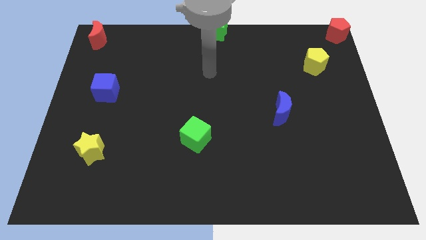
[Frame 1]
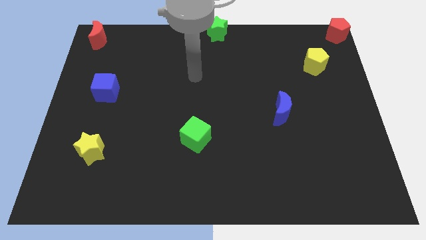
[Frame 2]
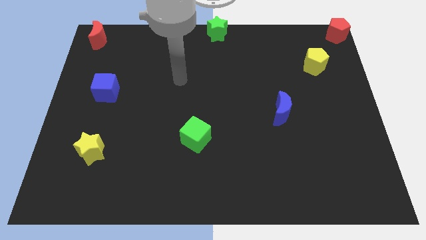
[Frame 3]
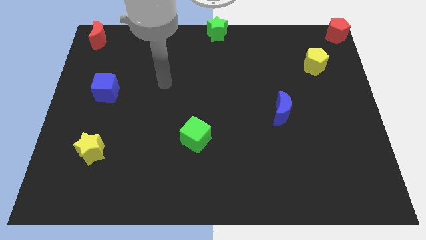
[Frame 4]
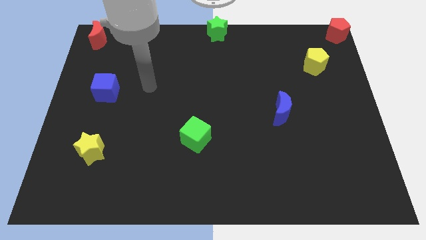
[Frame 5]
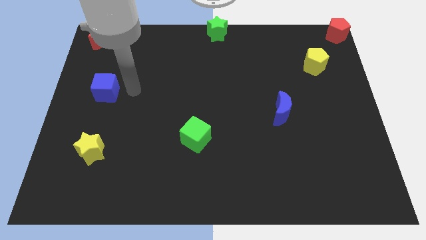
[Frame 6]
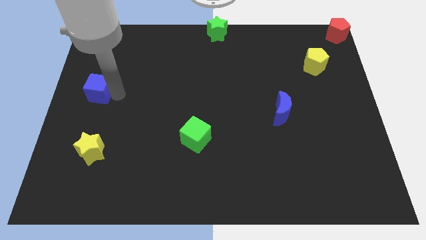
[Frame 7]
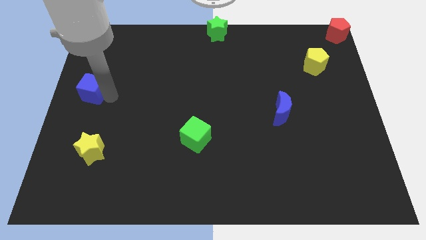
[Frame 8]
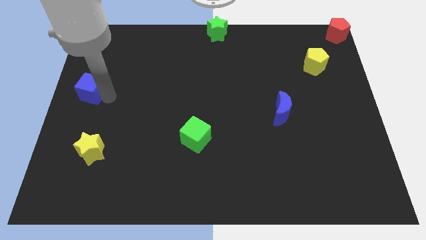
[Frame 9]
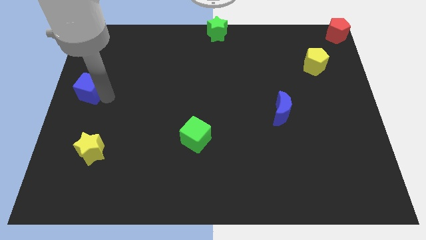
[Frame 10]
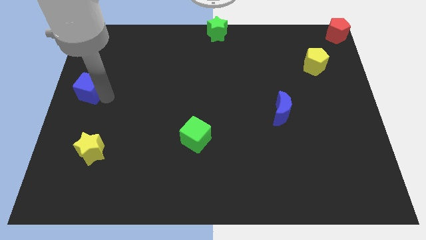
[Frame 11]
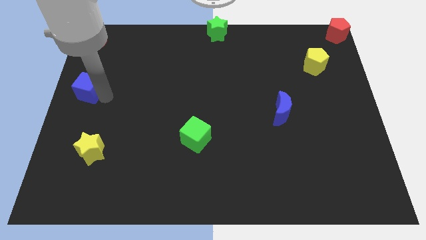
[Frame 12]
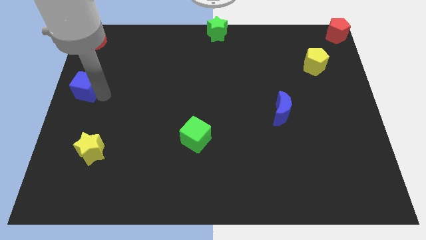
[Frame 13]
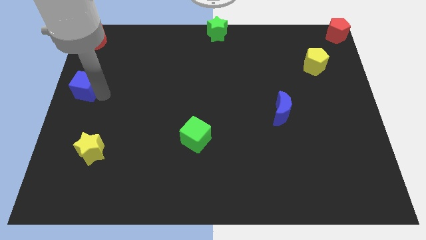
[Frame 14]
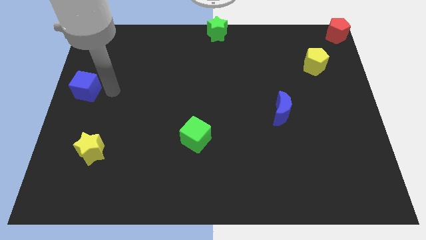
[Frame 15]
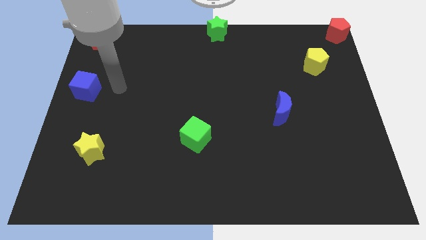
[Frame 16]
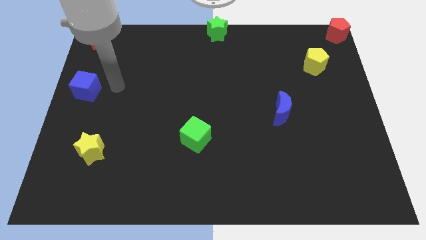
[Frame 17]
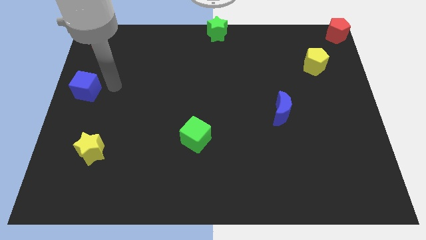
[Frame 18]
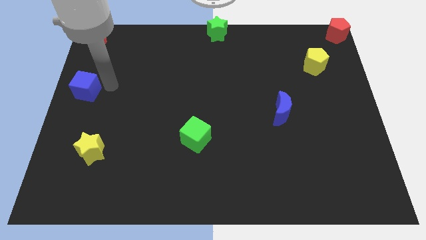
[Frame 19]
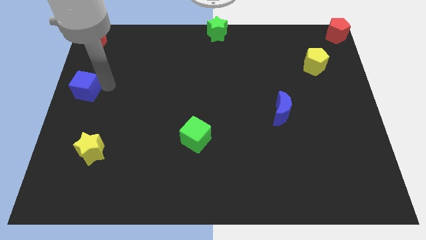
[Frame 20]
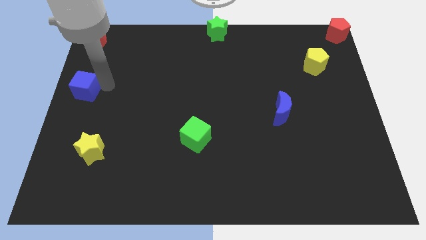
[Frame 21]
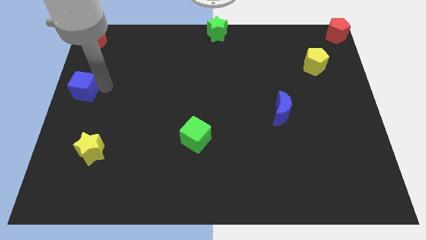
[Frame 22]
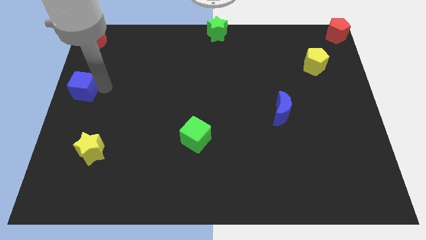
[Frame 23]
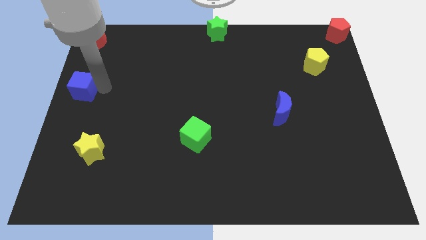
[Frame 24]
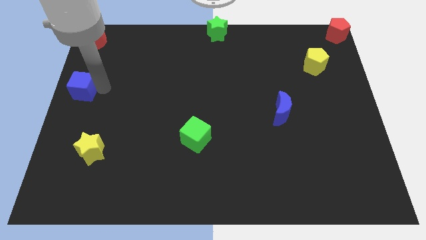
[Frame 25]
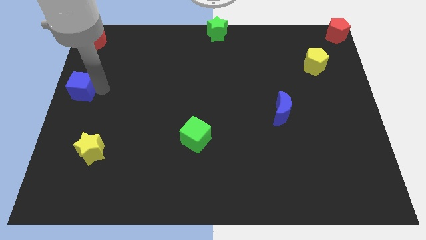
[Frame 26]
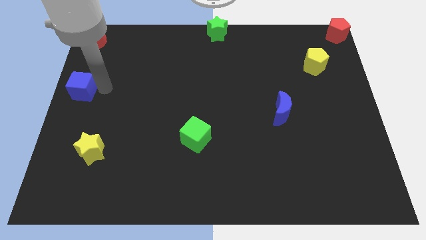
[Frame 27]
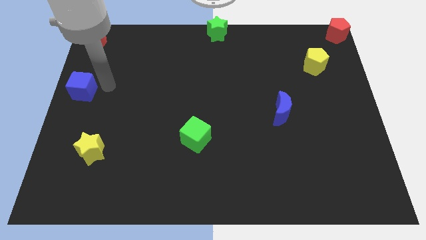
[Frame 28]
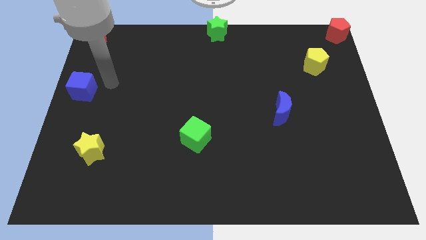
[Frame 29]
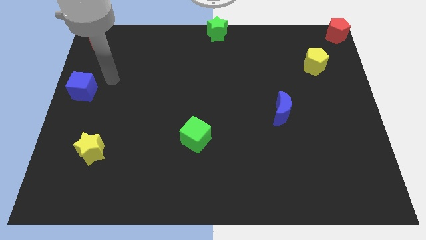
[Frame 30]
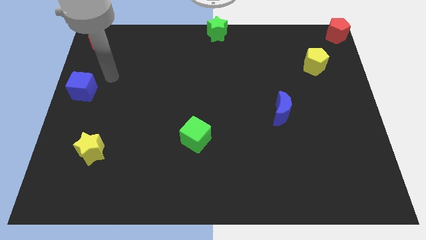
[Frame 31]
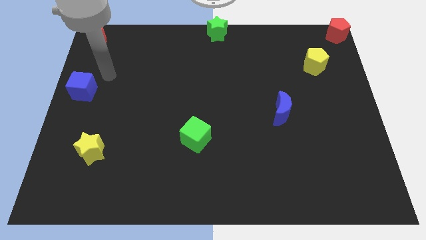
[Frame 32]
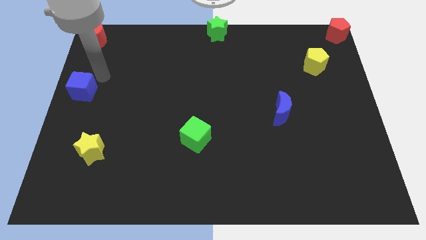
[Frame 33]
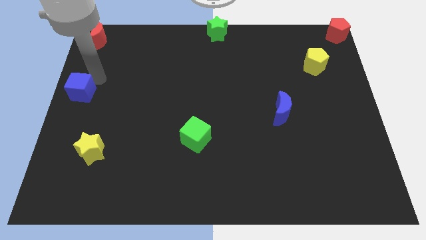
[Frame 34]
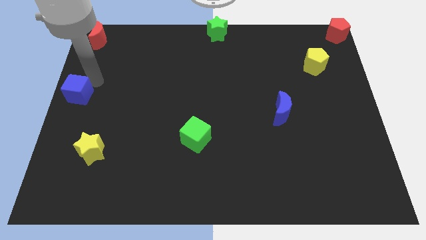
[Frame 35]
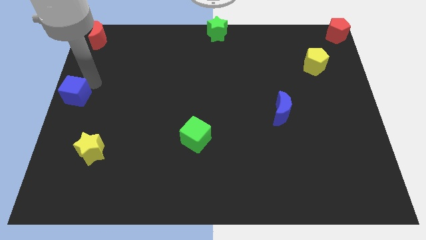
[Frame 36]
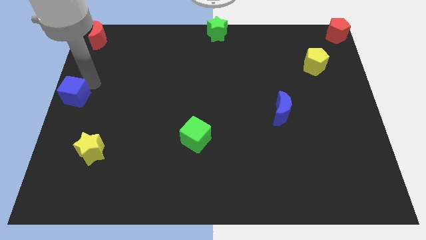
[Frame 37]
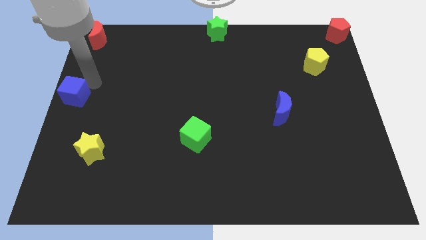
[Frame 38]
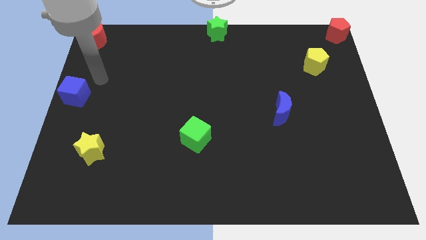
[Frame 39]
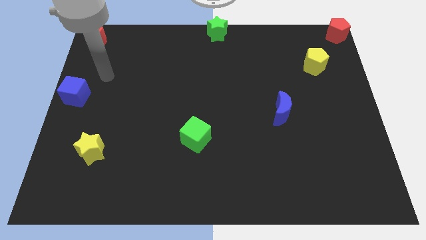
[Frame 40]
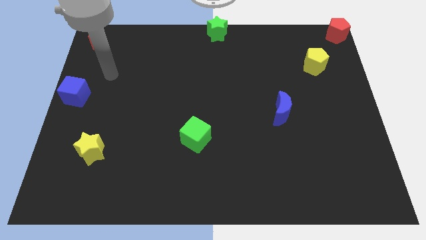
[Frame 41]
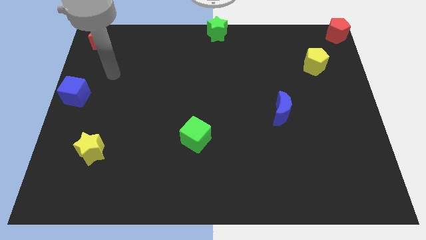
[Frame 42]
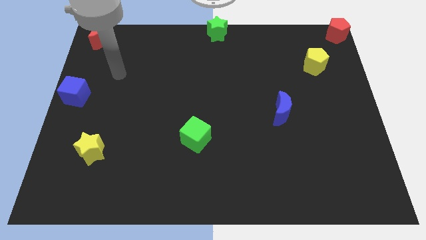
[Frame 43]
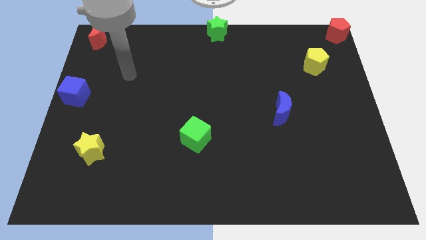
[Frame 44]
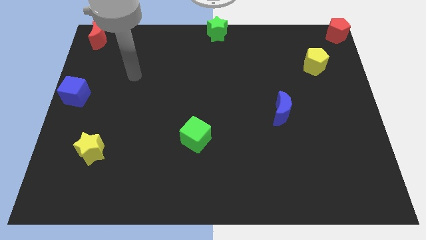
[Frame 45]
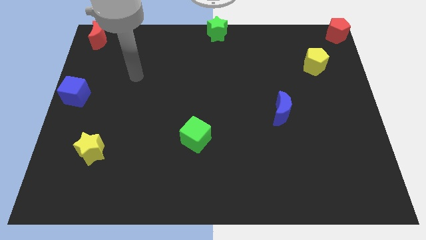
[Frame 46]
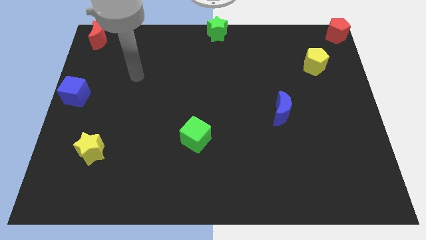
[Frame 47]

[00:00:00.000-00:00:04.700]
move the blue cube slightly towards the left center of the board

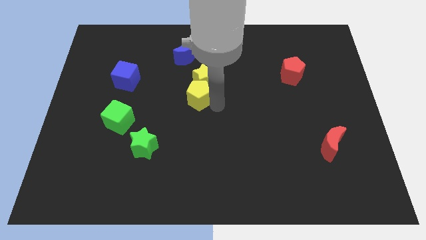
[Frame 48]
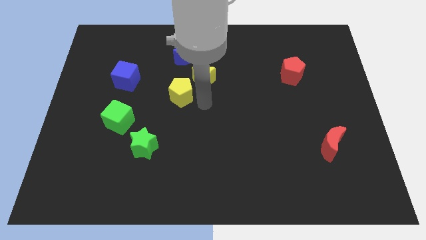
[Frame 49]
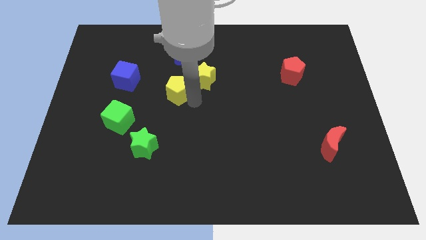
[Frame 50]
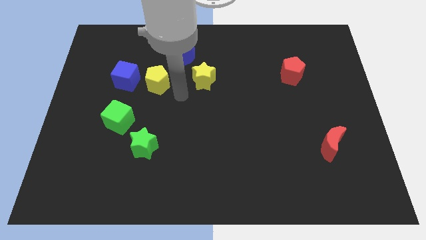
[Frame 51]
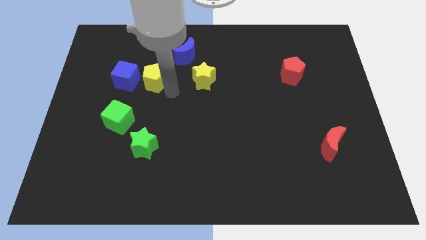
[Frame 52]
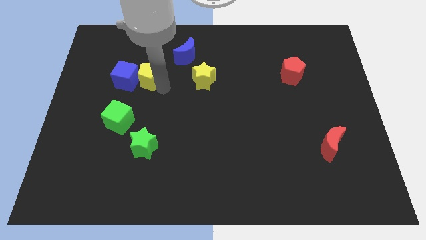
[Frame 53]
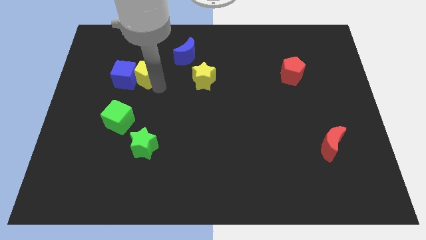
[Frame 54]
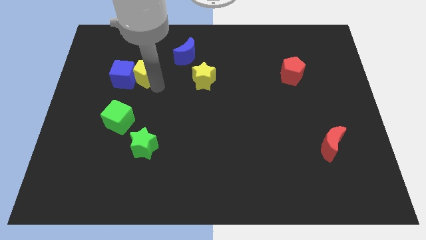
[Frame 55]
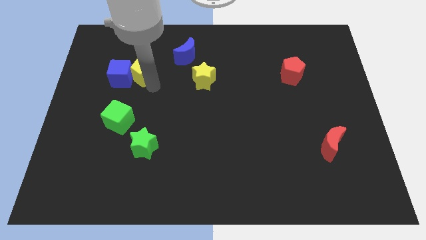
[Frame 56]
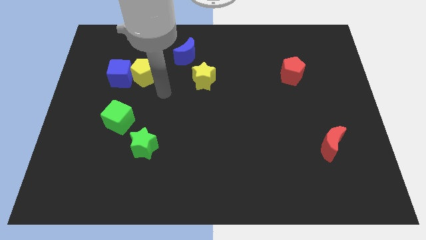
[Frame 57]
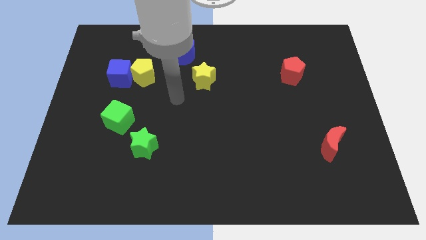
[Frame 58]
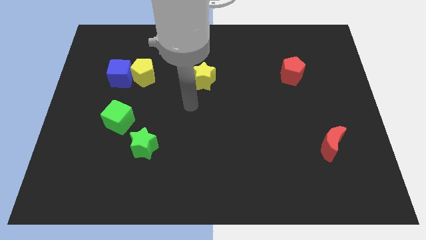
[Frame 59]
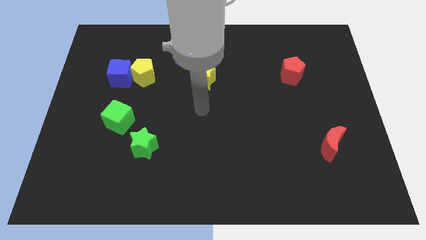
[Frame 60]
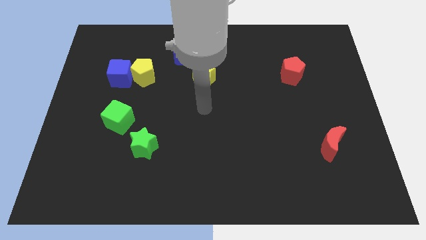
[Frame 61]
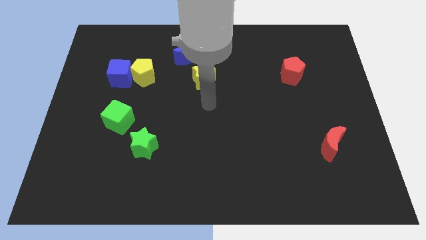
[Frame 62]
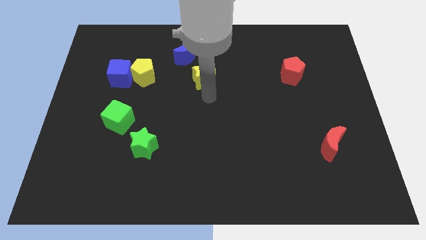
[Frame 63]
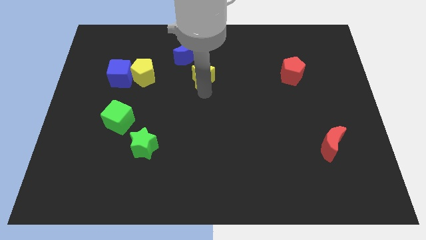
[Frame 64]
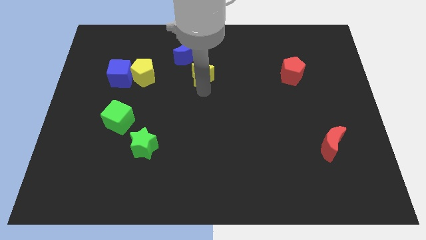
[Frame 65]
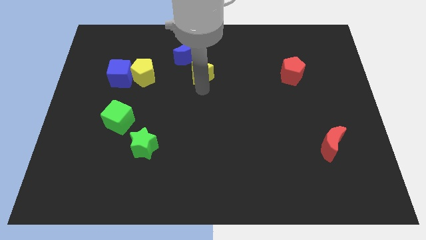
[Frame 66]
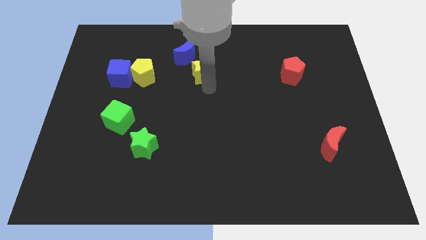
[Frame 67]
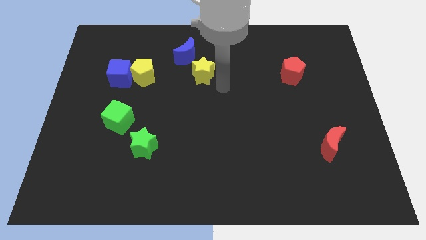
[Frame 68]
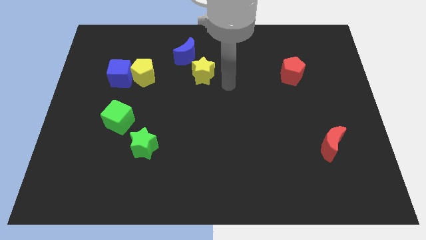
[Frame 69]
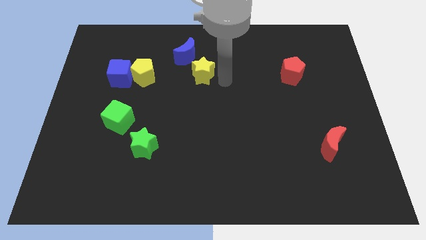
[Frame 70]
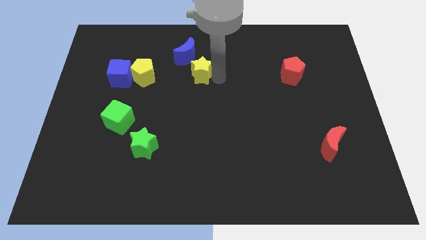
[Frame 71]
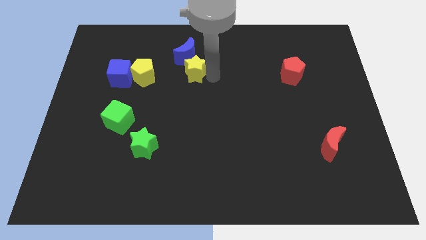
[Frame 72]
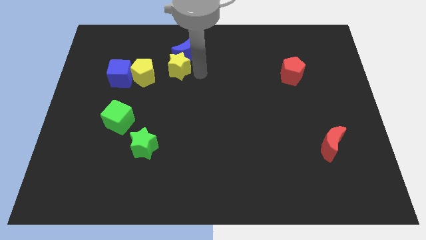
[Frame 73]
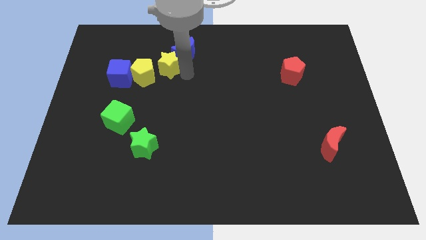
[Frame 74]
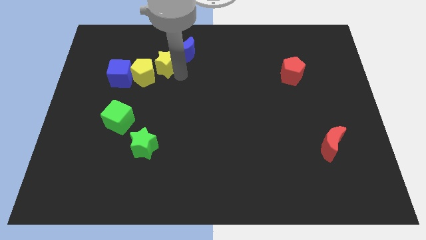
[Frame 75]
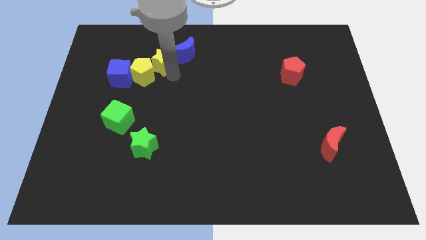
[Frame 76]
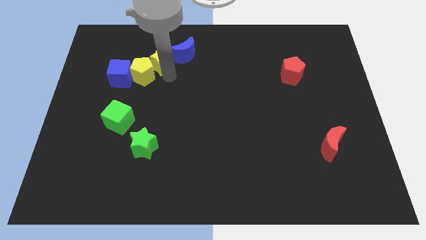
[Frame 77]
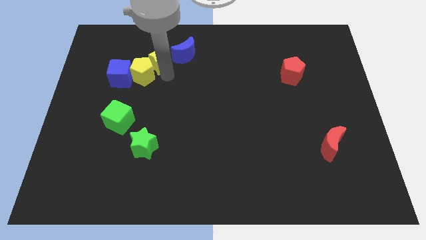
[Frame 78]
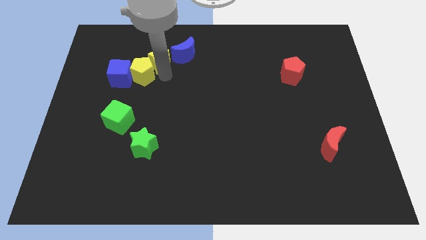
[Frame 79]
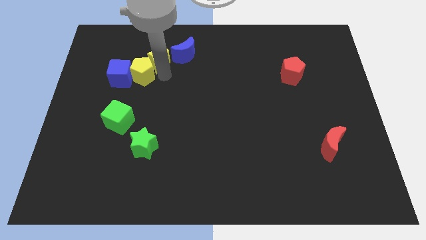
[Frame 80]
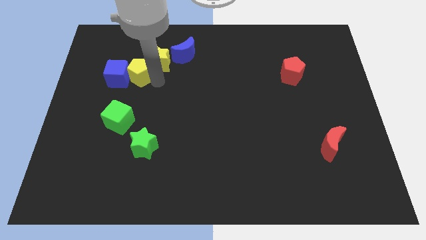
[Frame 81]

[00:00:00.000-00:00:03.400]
place the yellow pentagon and yellow star to the right side of the blue cube

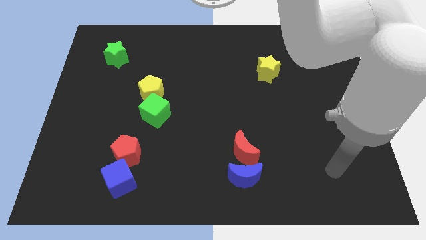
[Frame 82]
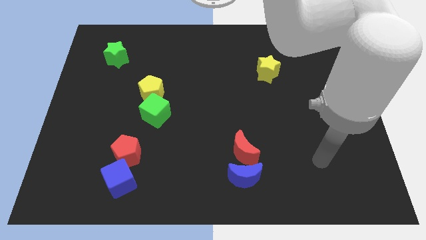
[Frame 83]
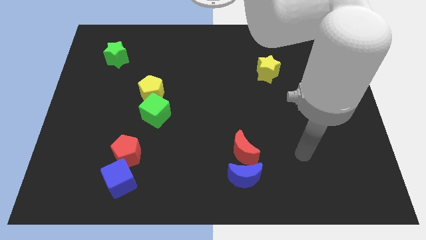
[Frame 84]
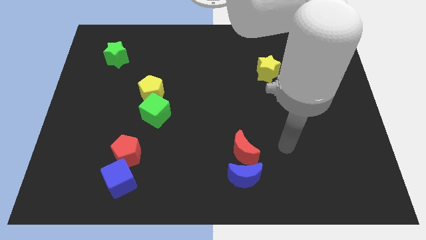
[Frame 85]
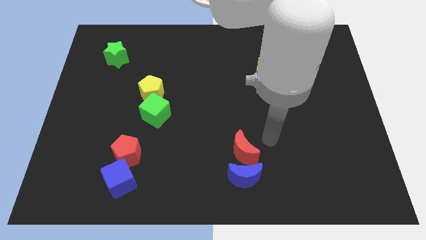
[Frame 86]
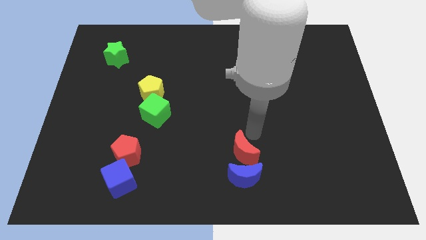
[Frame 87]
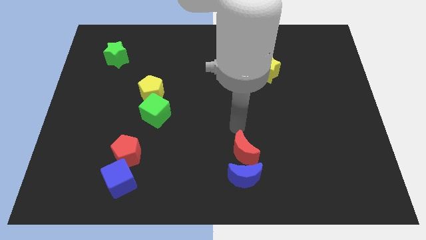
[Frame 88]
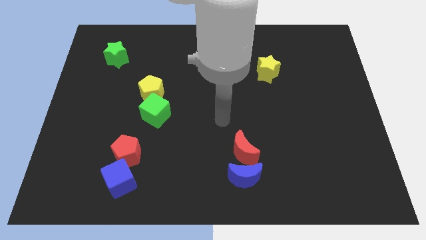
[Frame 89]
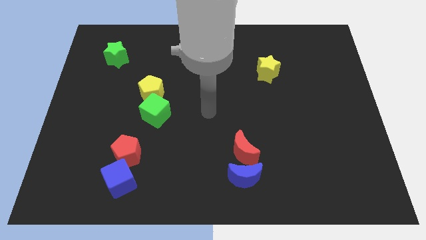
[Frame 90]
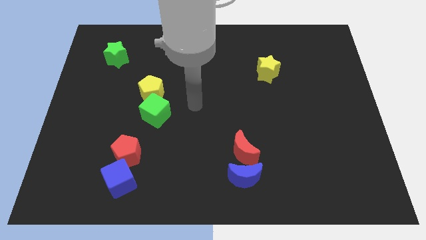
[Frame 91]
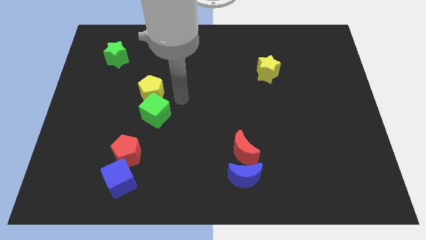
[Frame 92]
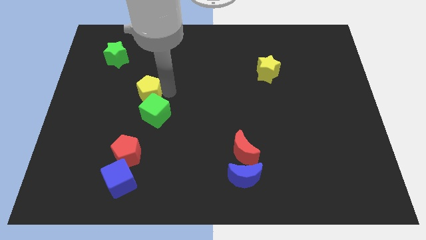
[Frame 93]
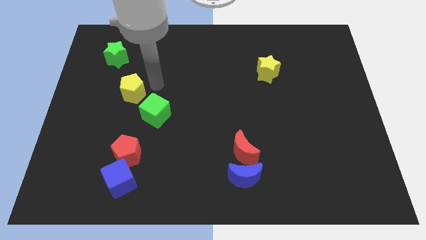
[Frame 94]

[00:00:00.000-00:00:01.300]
move arm near yellow pentagon
